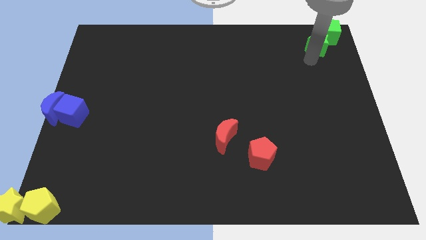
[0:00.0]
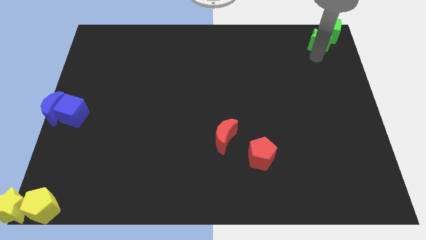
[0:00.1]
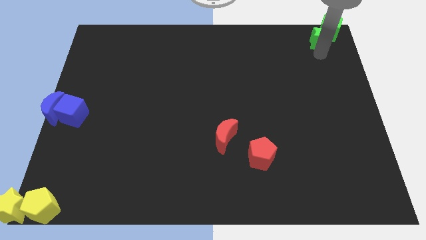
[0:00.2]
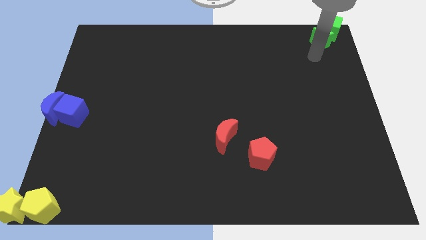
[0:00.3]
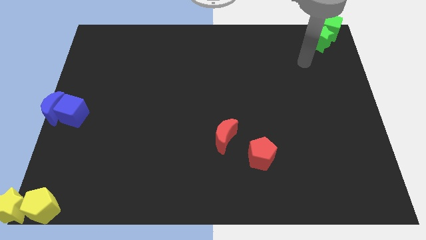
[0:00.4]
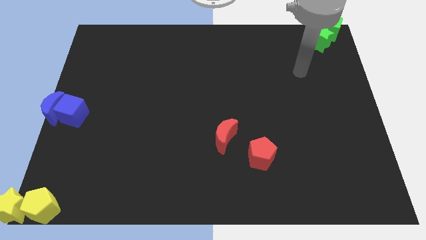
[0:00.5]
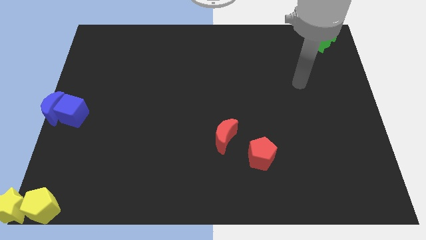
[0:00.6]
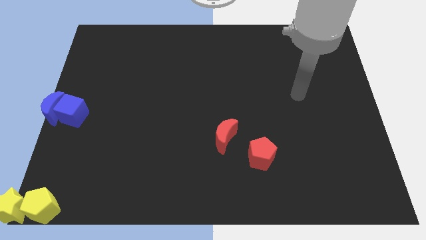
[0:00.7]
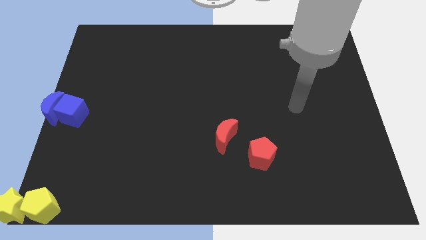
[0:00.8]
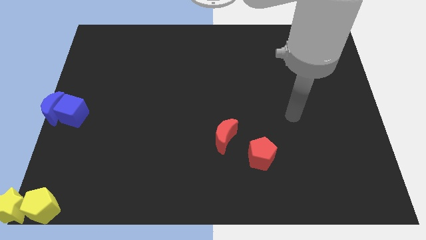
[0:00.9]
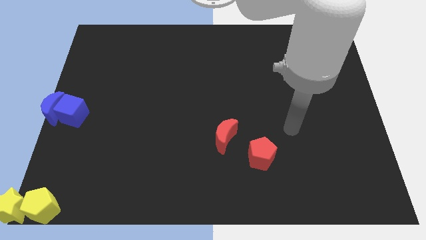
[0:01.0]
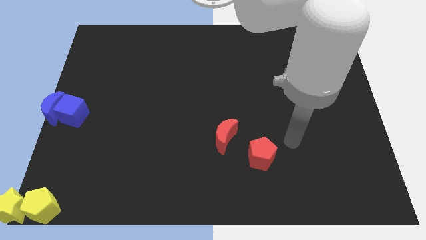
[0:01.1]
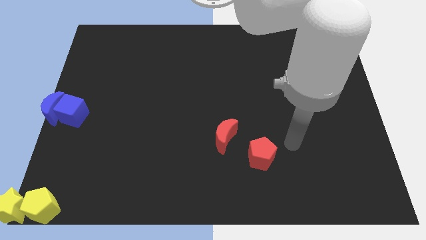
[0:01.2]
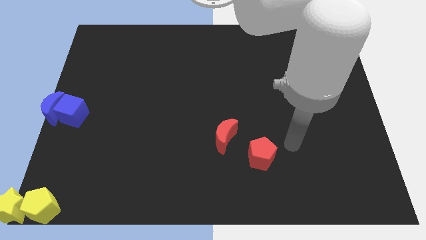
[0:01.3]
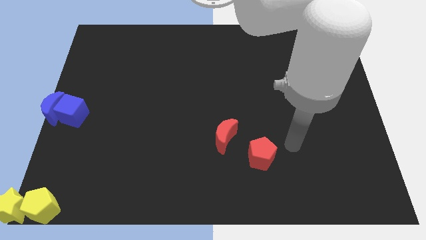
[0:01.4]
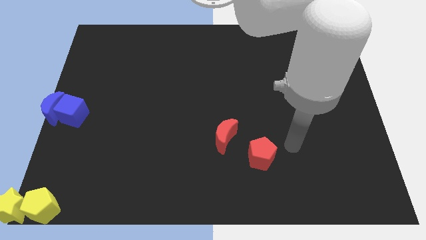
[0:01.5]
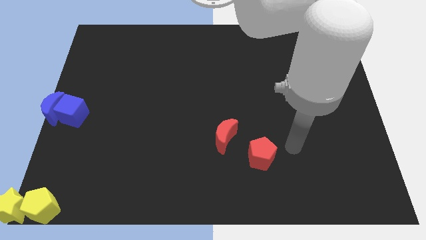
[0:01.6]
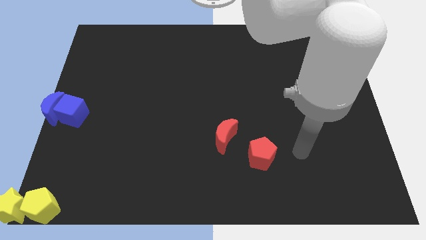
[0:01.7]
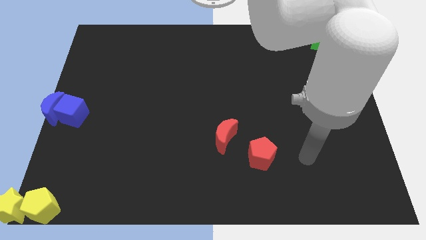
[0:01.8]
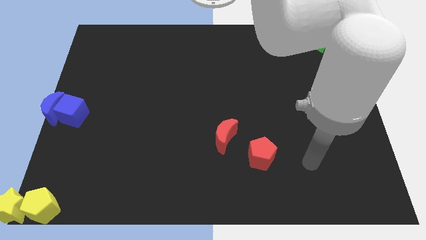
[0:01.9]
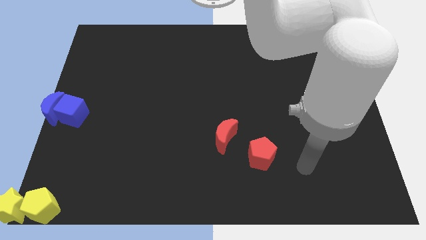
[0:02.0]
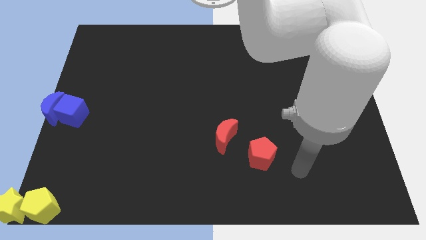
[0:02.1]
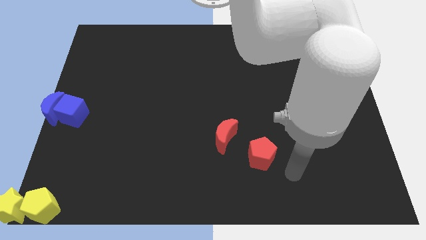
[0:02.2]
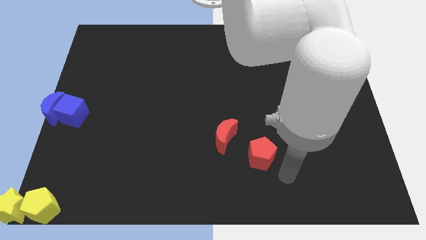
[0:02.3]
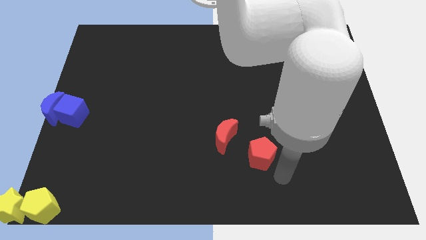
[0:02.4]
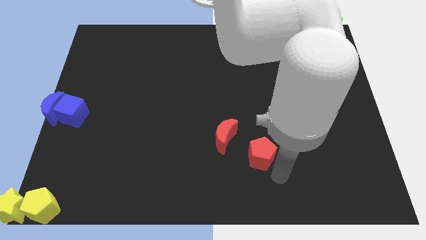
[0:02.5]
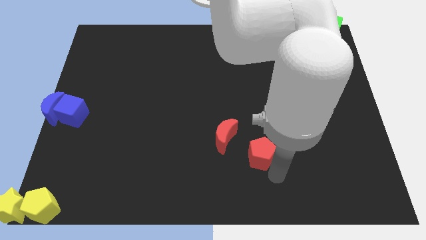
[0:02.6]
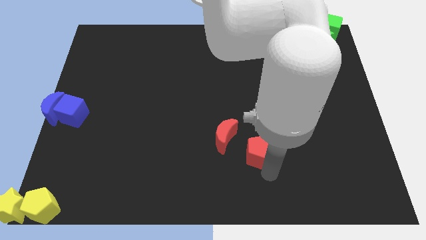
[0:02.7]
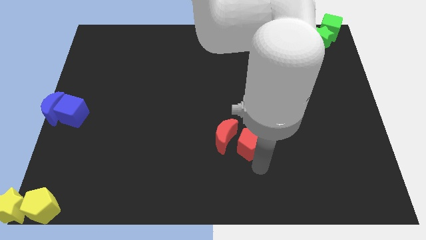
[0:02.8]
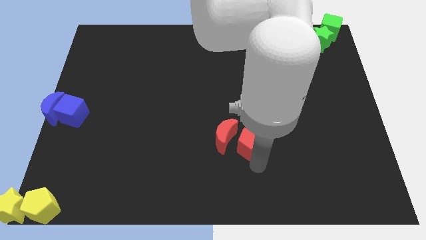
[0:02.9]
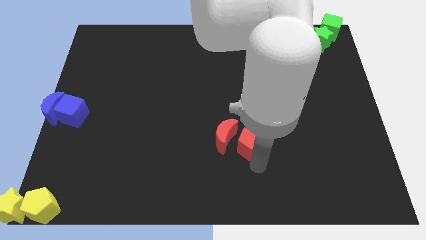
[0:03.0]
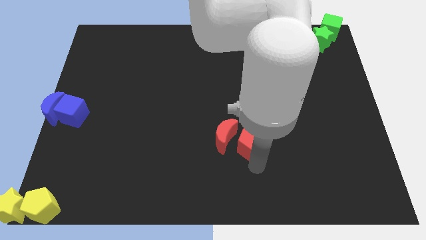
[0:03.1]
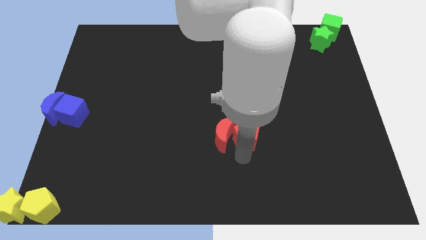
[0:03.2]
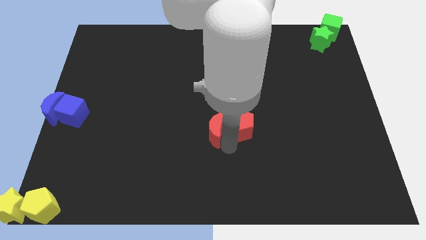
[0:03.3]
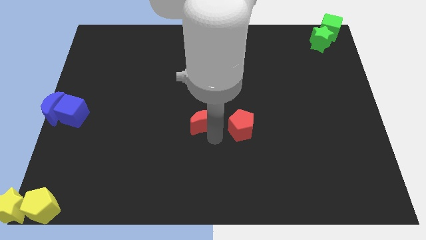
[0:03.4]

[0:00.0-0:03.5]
push the red pentagon to the right of the red room

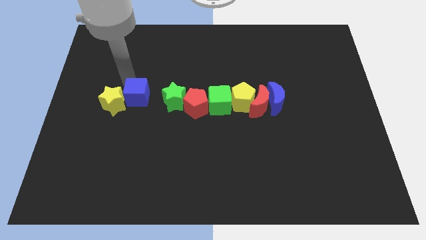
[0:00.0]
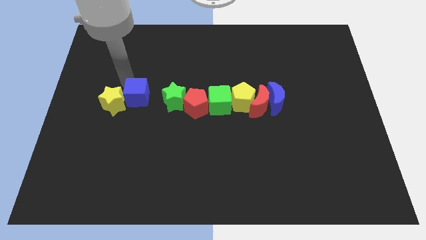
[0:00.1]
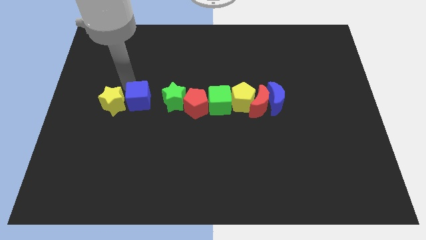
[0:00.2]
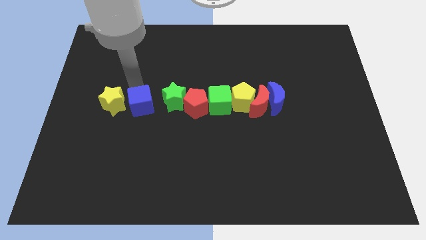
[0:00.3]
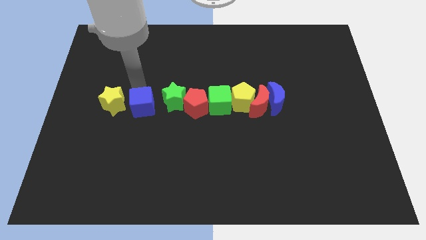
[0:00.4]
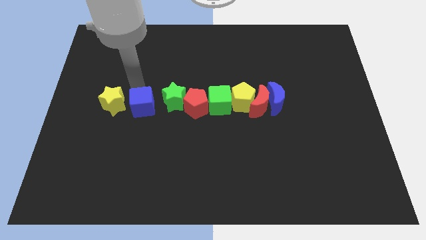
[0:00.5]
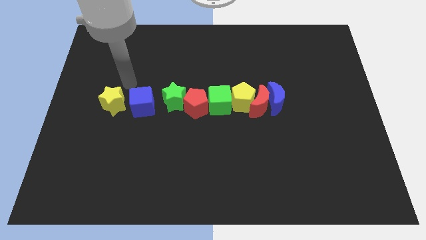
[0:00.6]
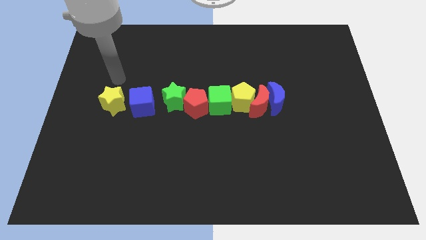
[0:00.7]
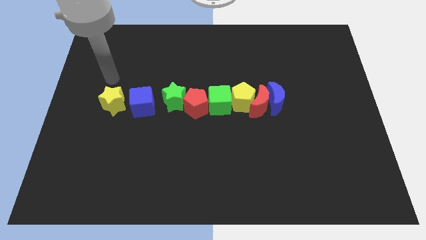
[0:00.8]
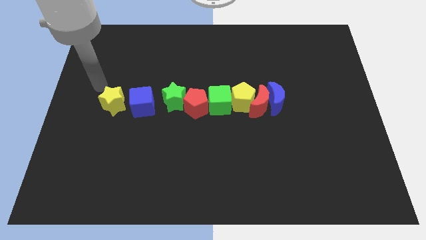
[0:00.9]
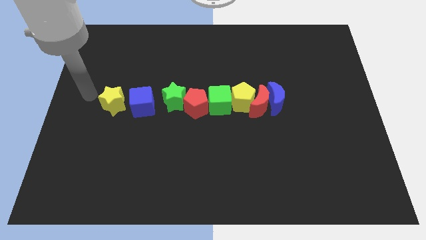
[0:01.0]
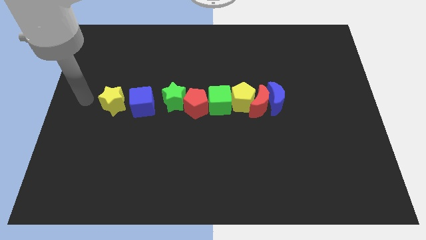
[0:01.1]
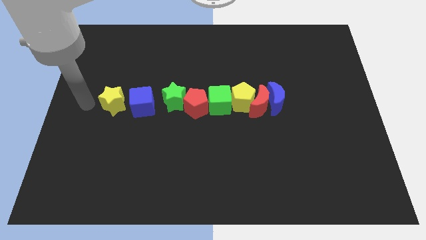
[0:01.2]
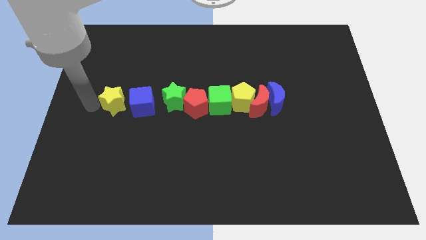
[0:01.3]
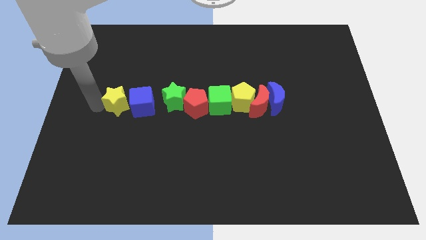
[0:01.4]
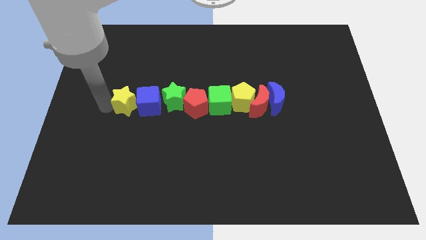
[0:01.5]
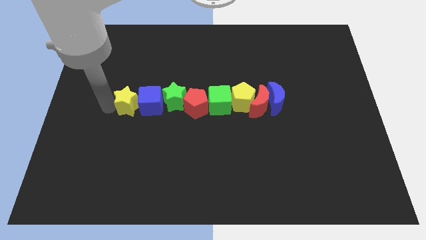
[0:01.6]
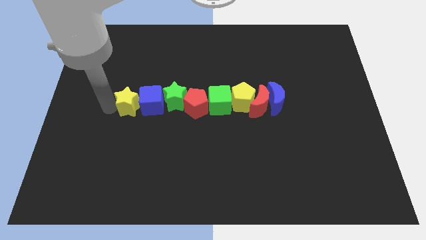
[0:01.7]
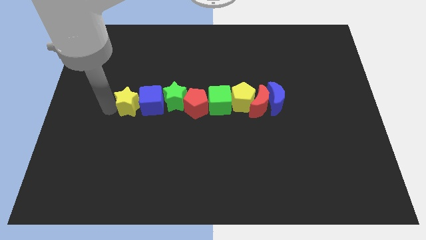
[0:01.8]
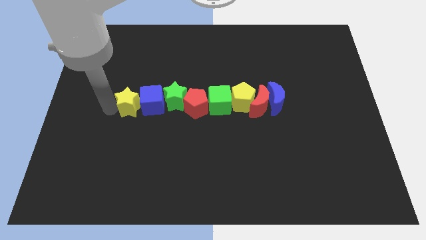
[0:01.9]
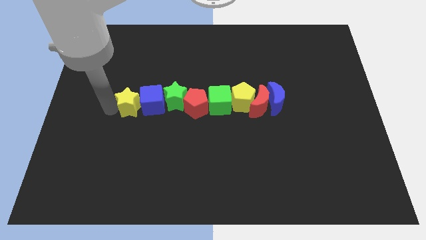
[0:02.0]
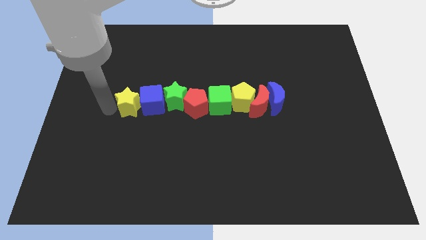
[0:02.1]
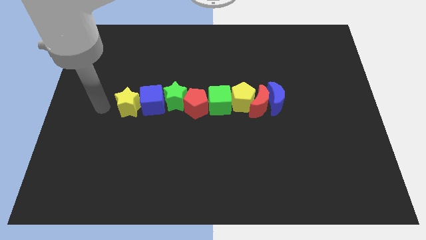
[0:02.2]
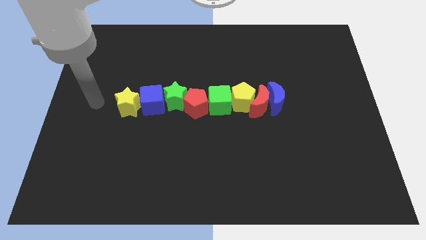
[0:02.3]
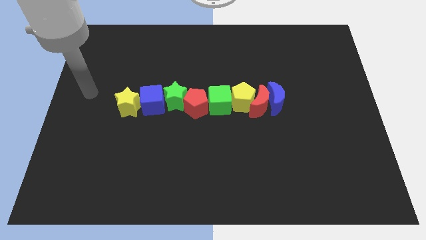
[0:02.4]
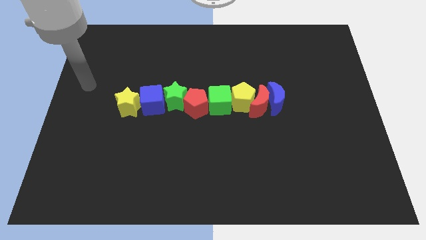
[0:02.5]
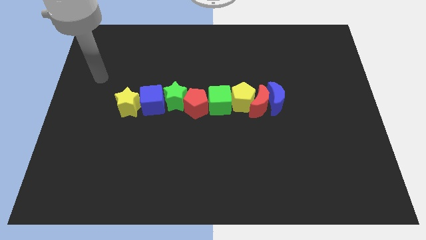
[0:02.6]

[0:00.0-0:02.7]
push the yellow star and blue cube into the green star

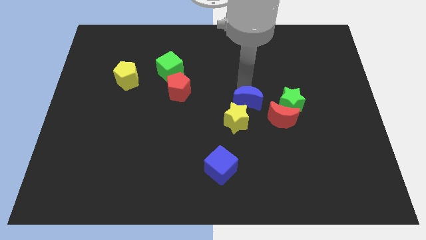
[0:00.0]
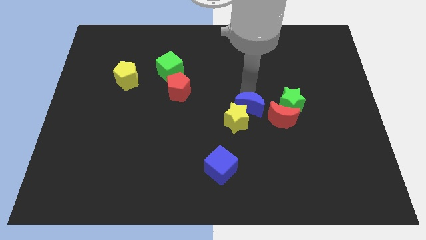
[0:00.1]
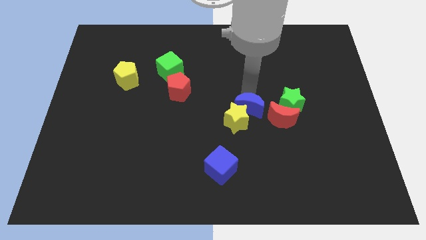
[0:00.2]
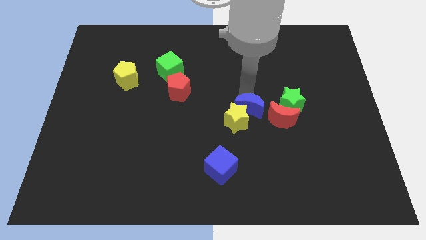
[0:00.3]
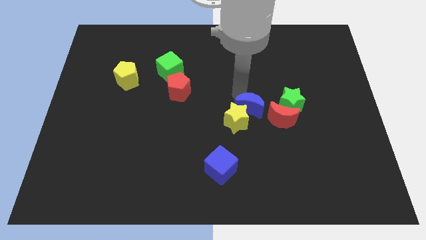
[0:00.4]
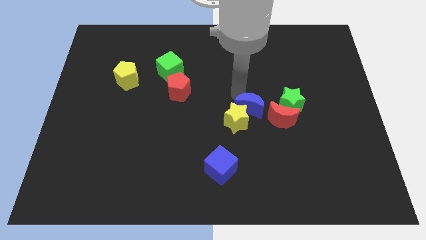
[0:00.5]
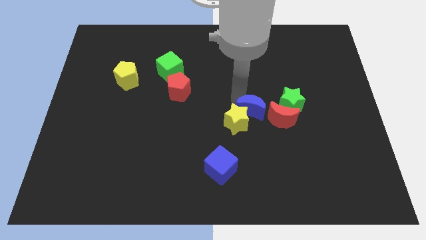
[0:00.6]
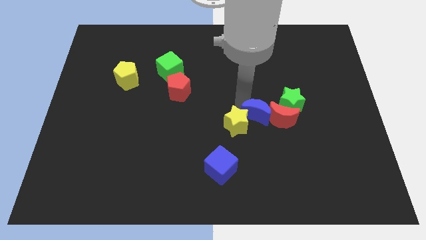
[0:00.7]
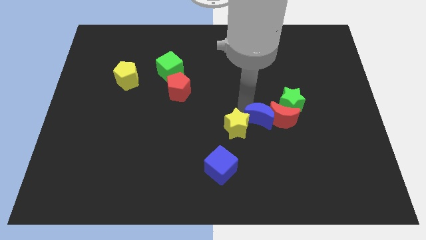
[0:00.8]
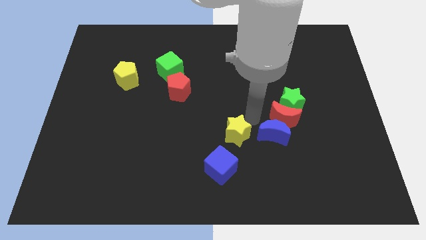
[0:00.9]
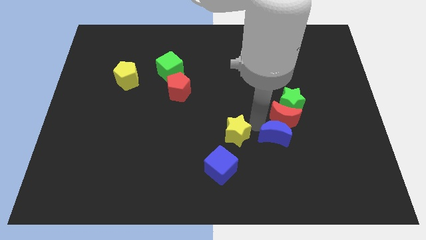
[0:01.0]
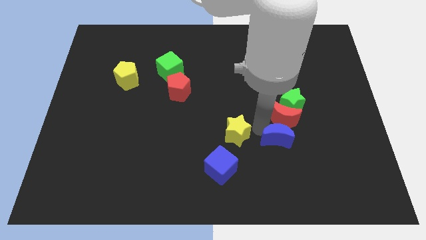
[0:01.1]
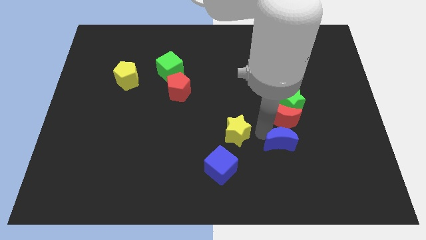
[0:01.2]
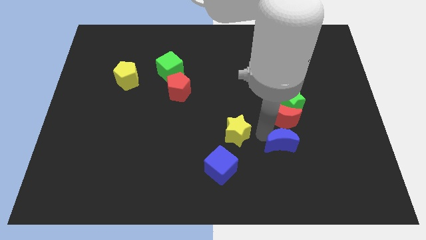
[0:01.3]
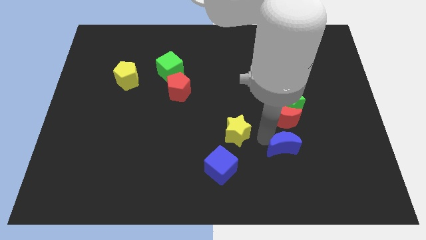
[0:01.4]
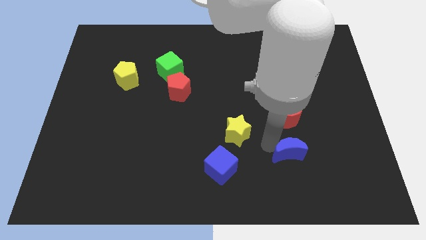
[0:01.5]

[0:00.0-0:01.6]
place the blue moon below the red moon

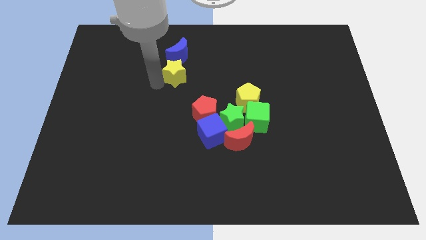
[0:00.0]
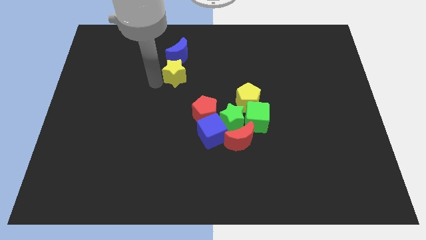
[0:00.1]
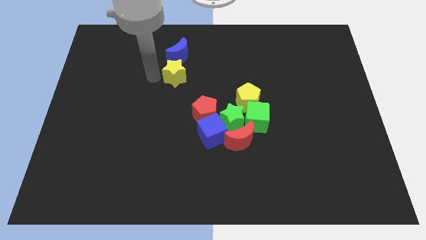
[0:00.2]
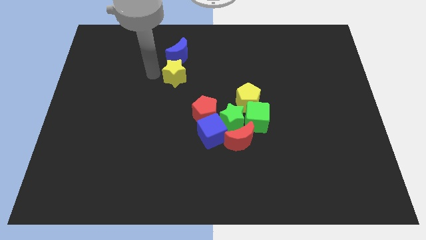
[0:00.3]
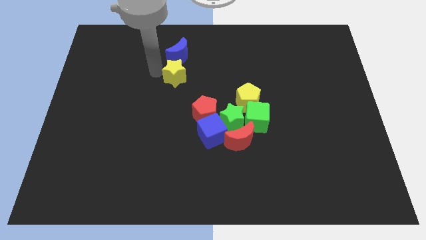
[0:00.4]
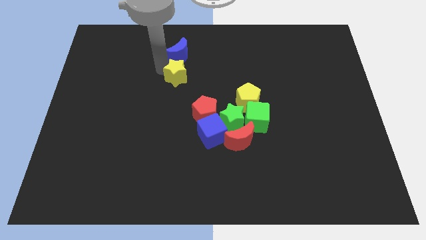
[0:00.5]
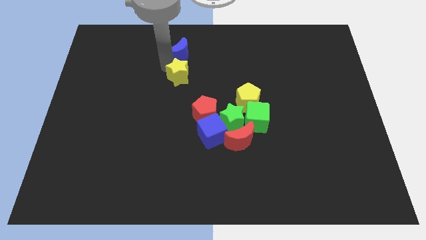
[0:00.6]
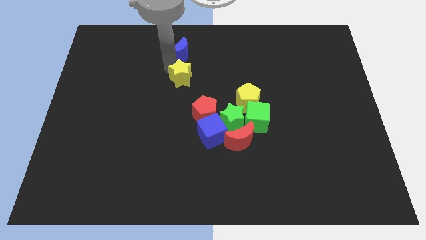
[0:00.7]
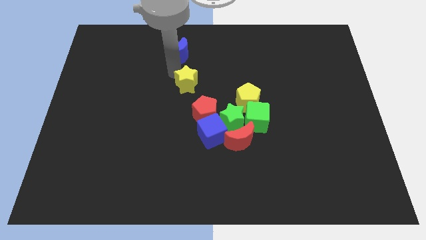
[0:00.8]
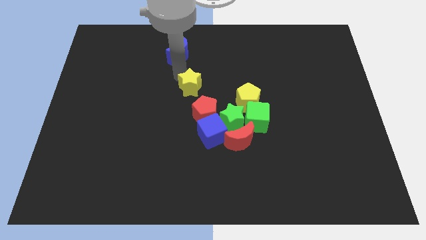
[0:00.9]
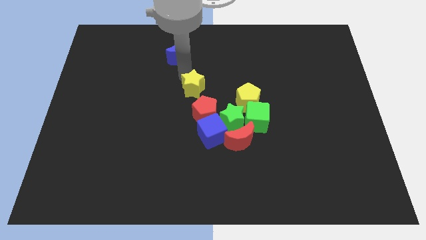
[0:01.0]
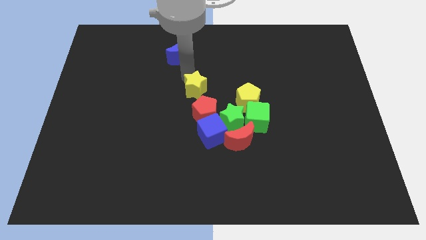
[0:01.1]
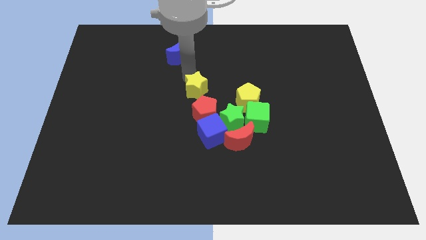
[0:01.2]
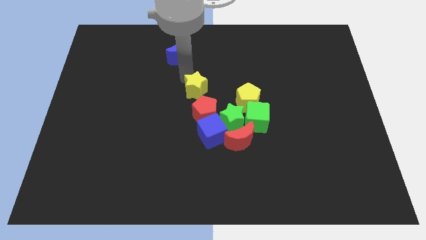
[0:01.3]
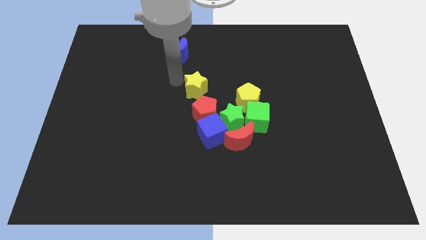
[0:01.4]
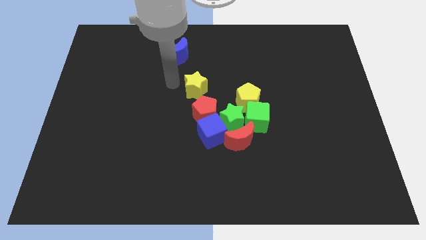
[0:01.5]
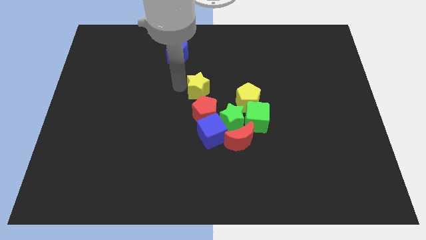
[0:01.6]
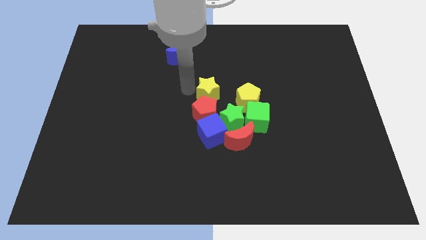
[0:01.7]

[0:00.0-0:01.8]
place the yellow star above the red pentagon
